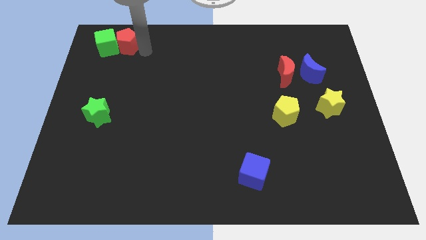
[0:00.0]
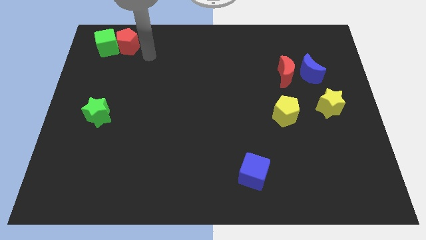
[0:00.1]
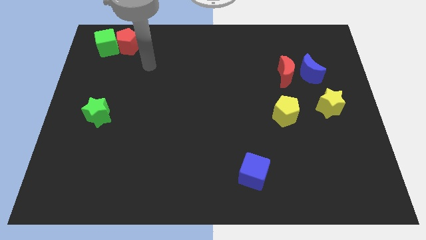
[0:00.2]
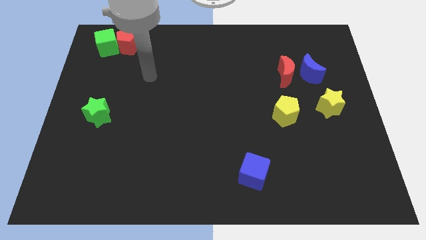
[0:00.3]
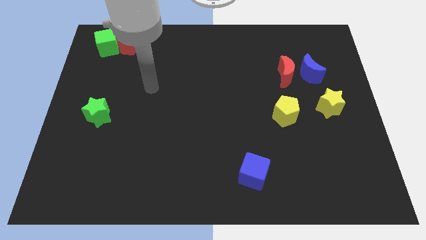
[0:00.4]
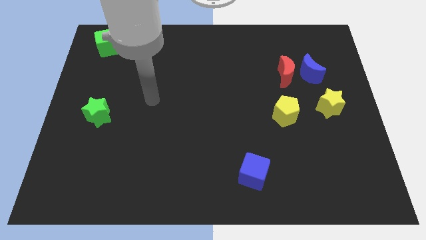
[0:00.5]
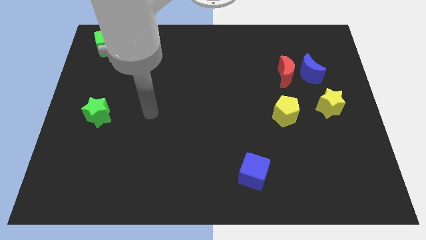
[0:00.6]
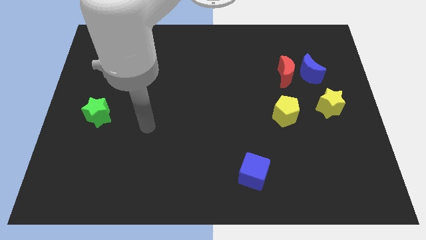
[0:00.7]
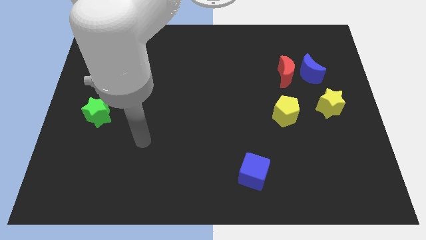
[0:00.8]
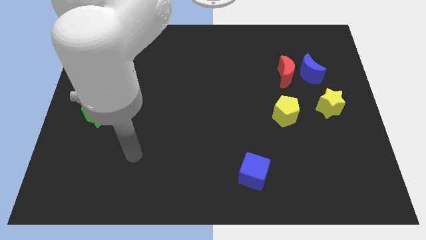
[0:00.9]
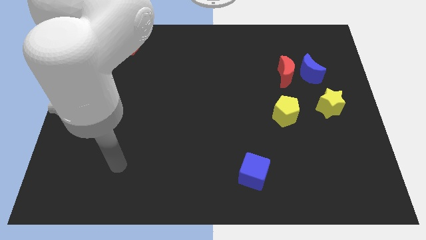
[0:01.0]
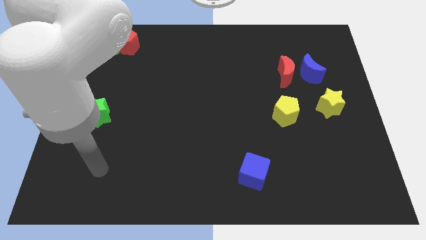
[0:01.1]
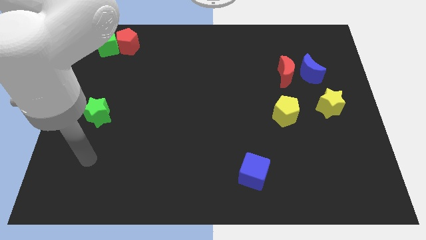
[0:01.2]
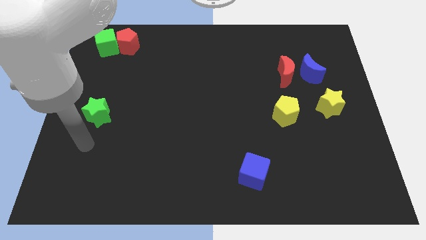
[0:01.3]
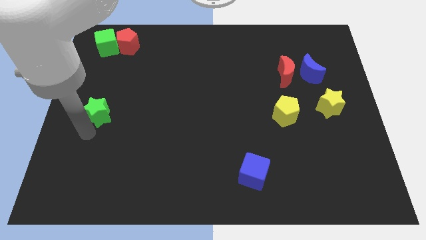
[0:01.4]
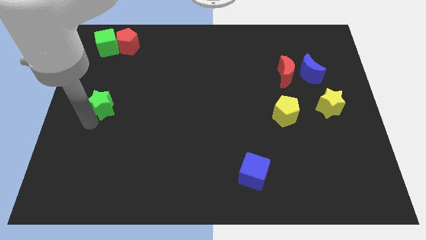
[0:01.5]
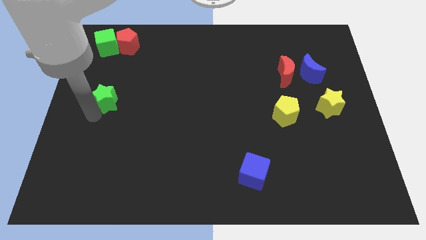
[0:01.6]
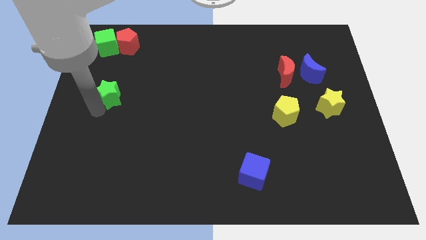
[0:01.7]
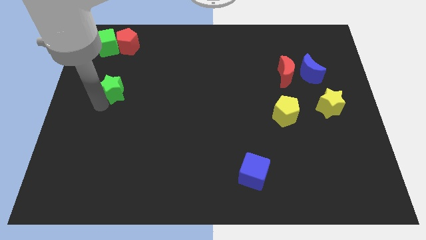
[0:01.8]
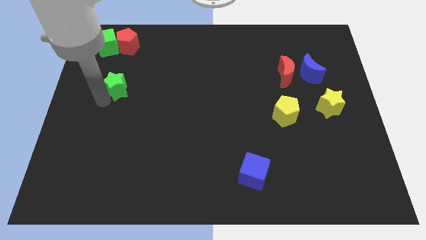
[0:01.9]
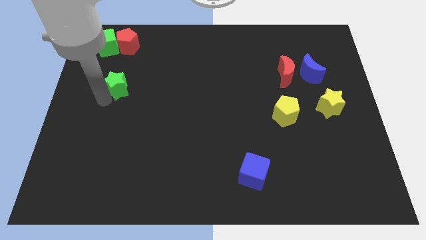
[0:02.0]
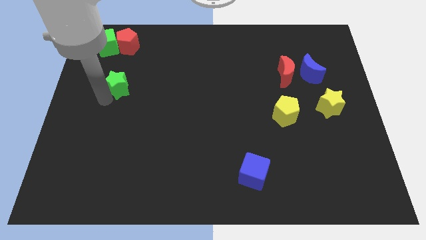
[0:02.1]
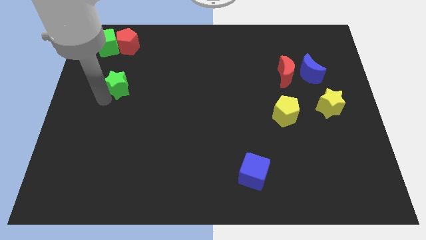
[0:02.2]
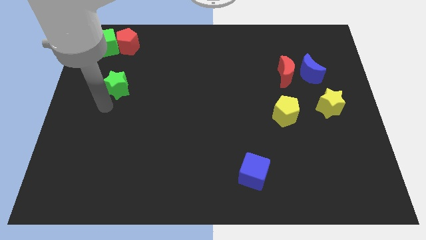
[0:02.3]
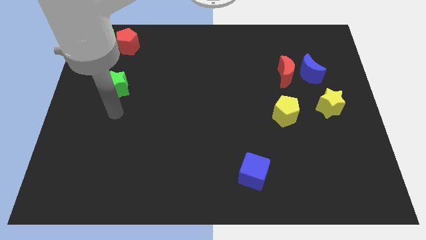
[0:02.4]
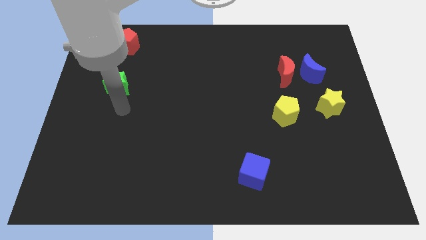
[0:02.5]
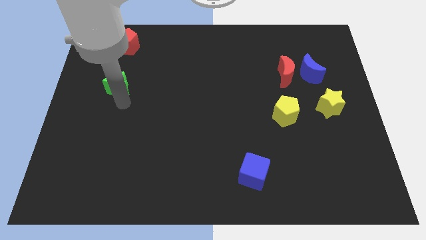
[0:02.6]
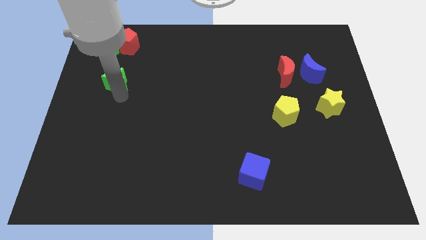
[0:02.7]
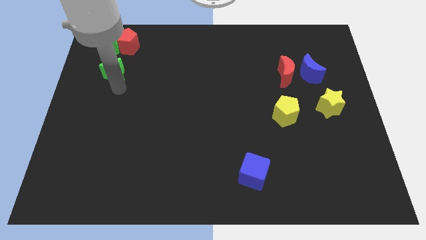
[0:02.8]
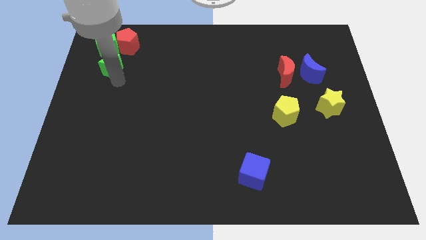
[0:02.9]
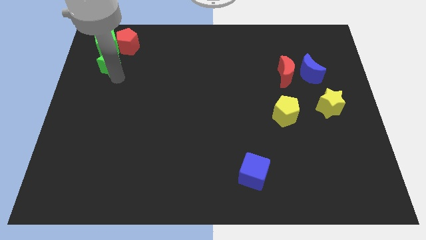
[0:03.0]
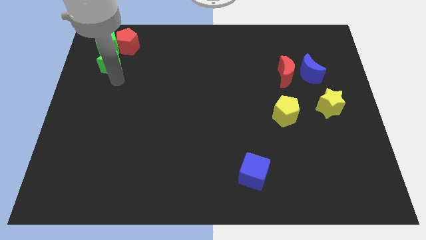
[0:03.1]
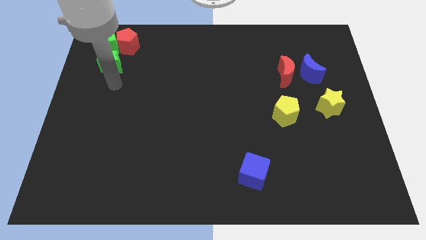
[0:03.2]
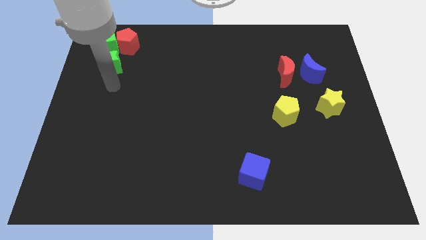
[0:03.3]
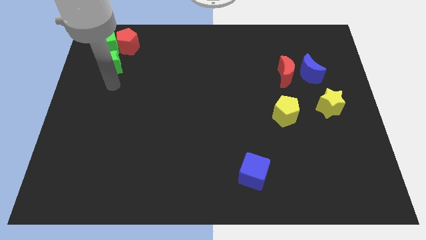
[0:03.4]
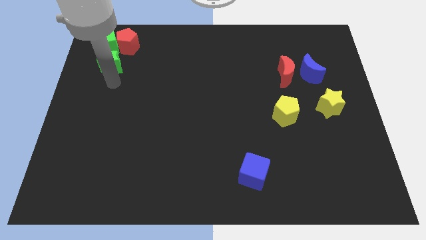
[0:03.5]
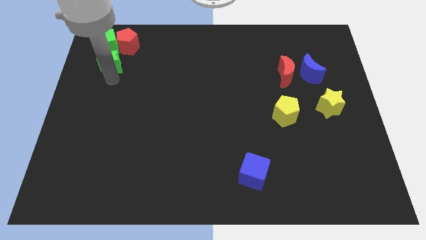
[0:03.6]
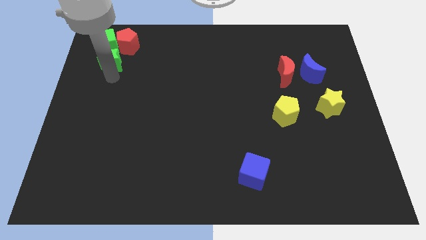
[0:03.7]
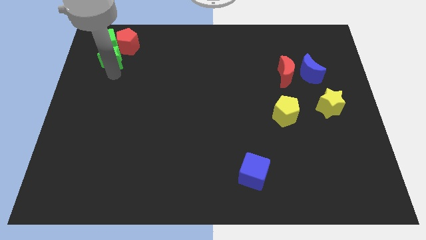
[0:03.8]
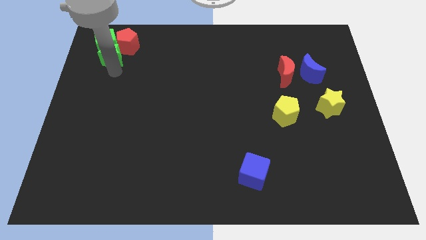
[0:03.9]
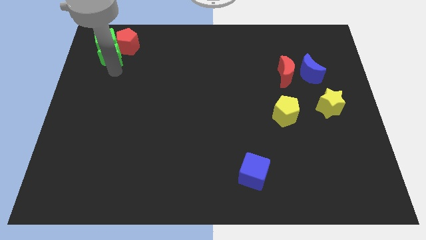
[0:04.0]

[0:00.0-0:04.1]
slide the green star into the green cube and red pentagon

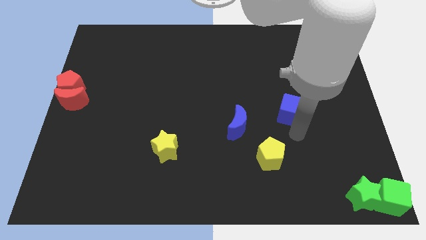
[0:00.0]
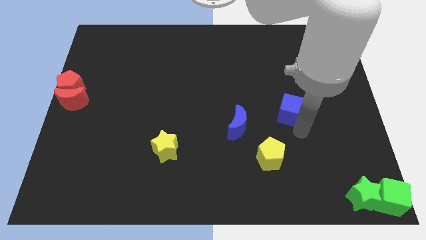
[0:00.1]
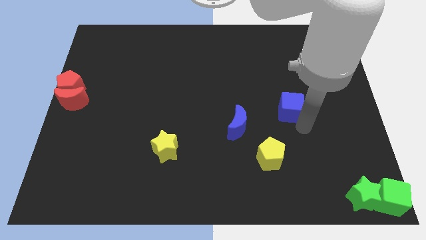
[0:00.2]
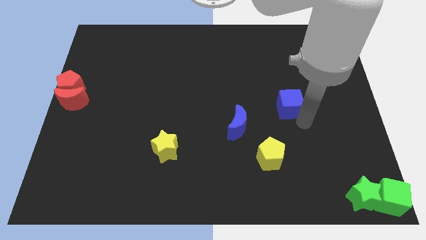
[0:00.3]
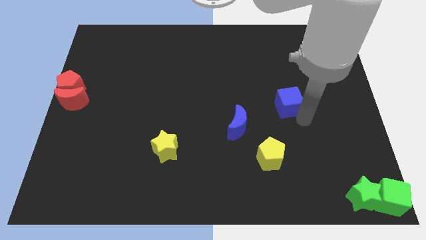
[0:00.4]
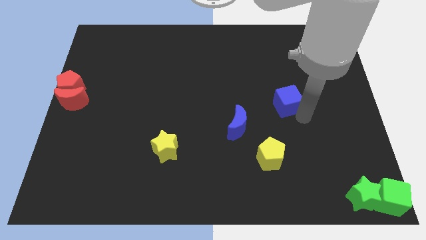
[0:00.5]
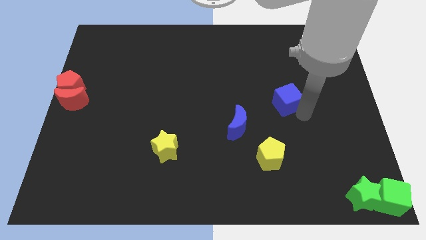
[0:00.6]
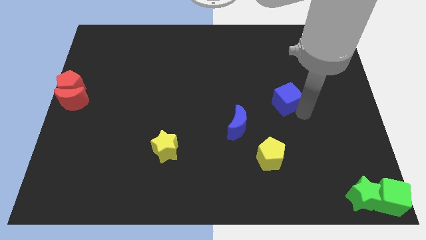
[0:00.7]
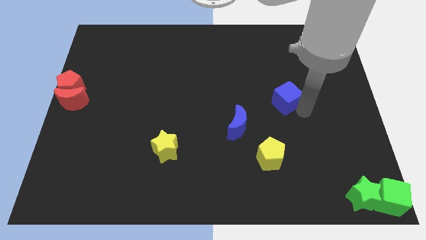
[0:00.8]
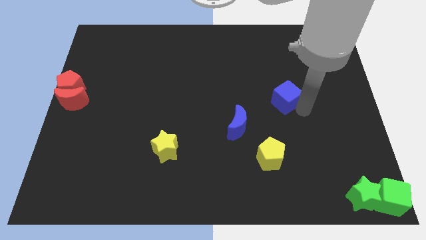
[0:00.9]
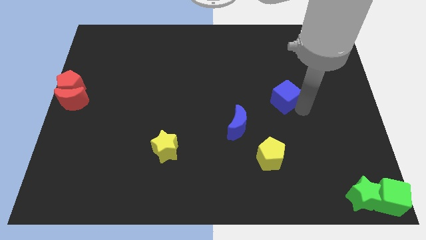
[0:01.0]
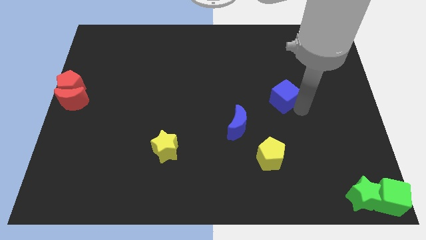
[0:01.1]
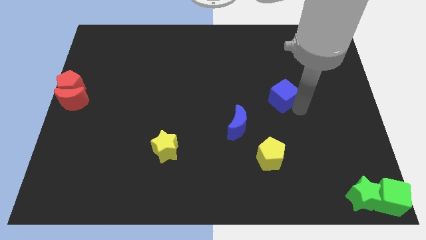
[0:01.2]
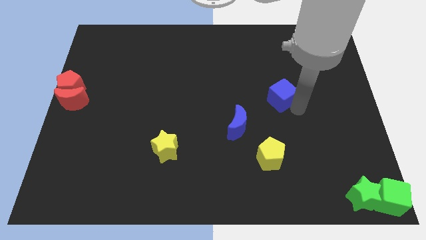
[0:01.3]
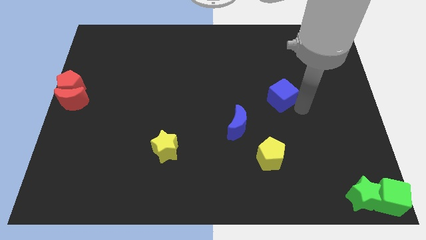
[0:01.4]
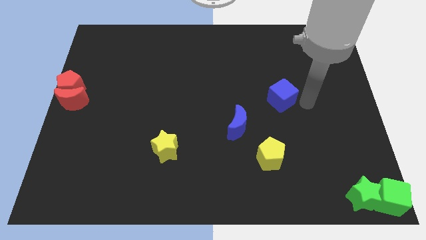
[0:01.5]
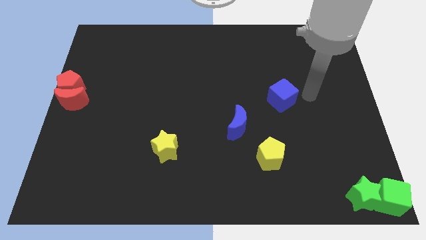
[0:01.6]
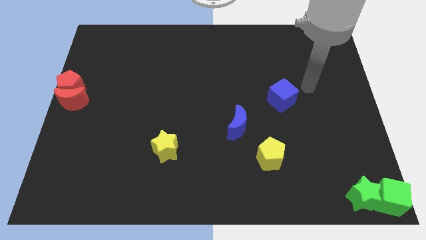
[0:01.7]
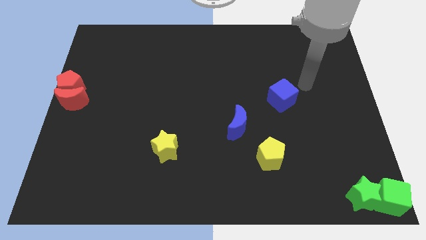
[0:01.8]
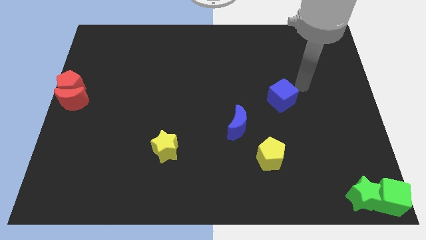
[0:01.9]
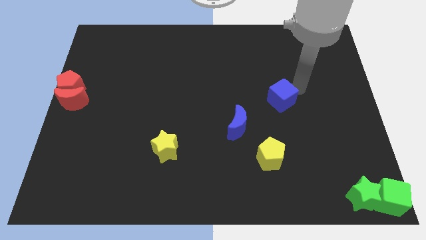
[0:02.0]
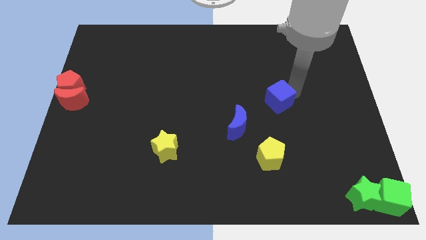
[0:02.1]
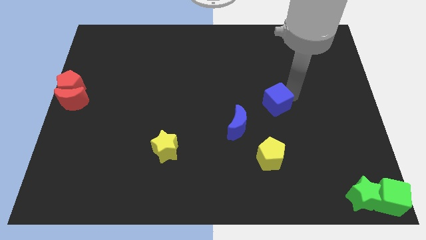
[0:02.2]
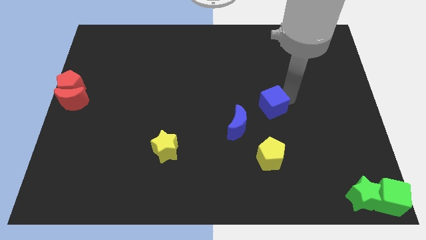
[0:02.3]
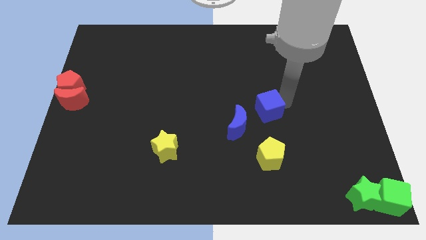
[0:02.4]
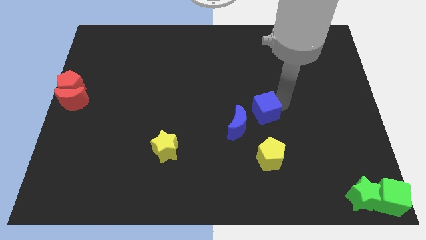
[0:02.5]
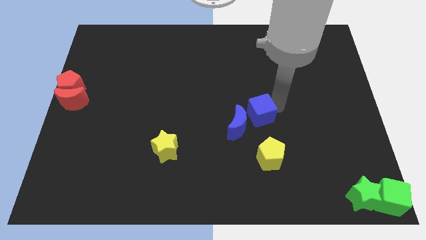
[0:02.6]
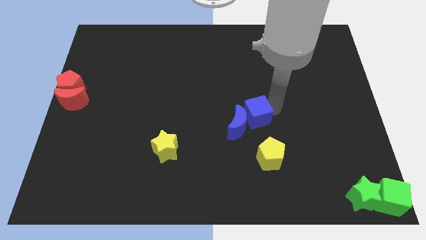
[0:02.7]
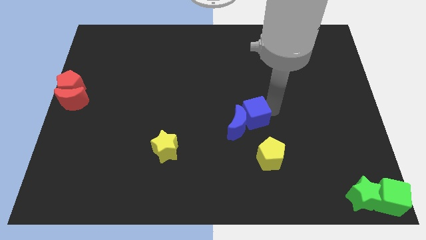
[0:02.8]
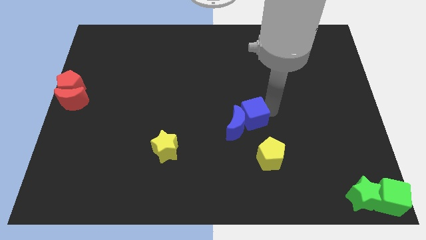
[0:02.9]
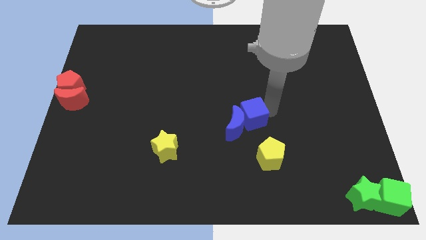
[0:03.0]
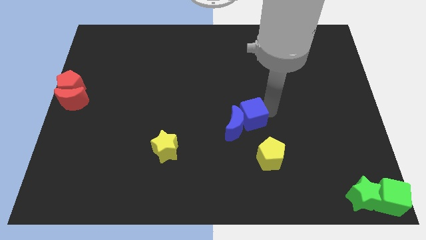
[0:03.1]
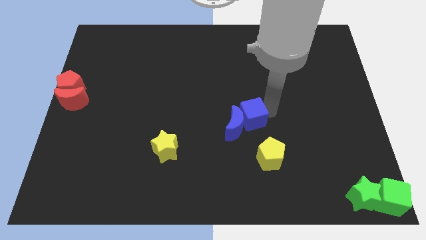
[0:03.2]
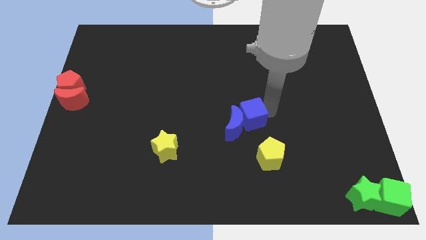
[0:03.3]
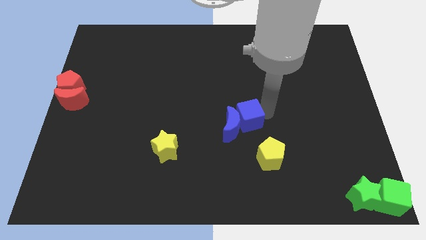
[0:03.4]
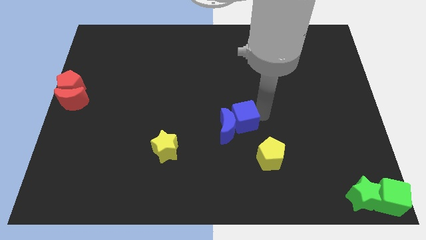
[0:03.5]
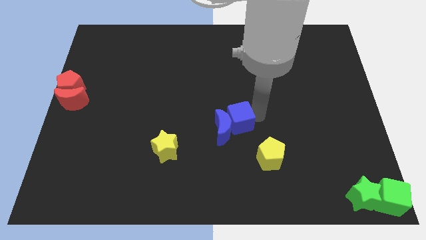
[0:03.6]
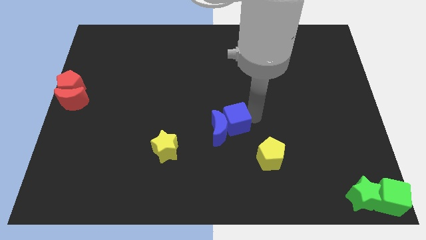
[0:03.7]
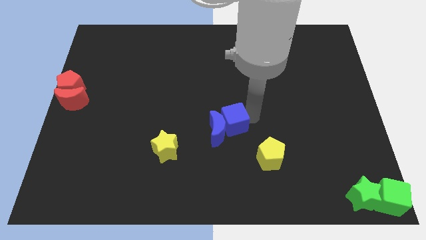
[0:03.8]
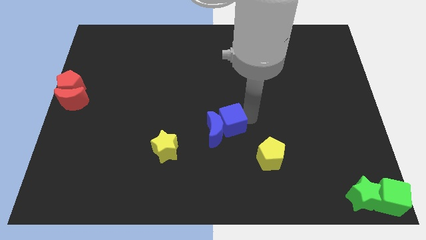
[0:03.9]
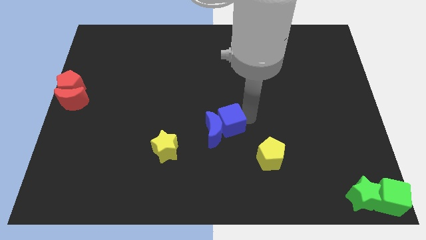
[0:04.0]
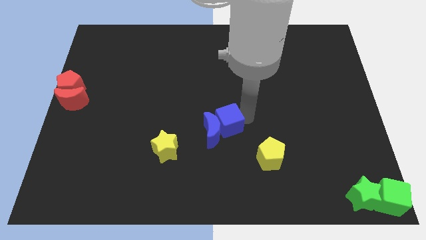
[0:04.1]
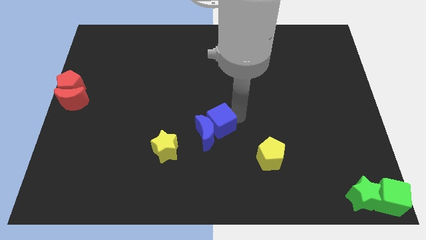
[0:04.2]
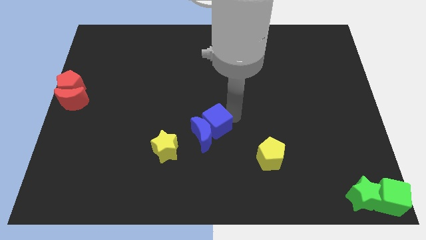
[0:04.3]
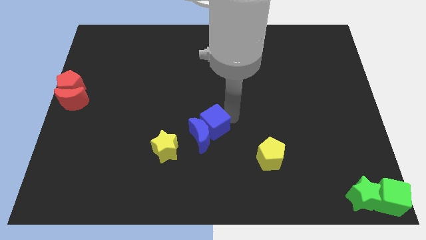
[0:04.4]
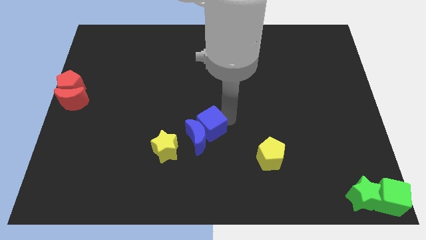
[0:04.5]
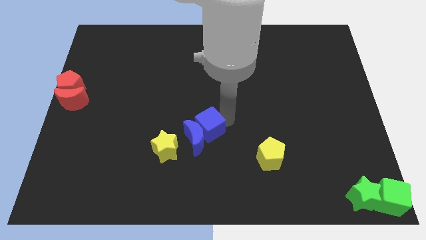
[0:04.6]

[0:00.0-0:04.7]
push the blue moon with a blue cube towards the right of the yellow star

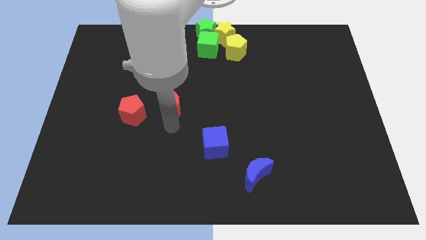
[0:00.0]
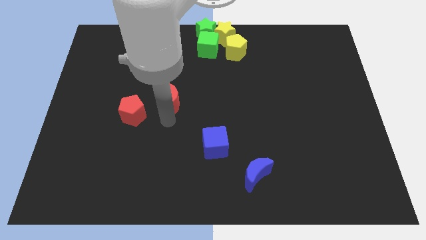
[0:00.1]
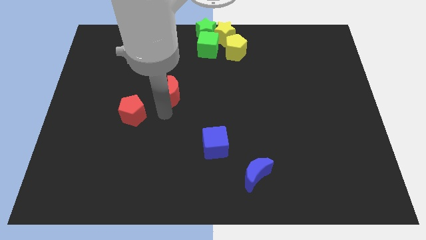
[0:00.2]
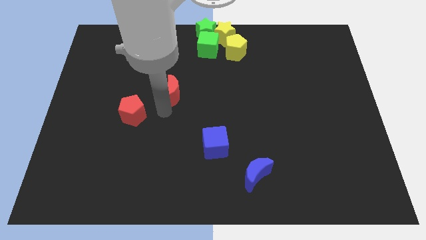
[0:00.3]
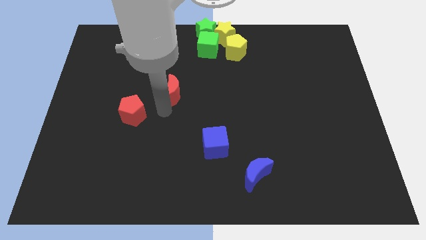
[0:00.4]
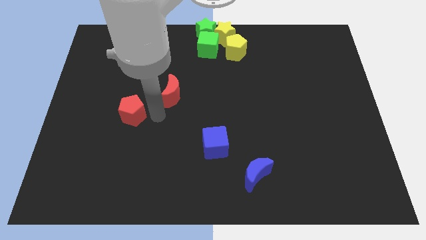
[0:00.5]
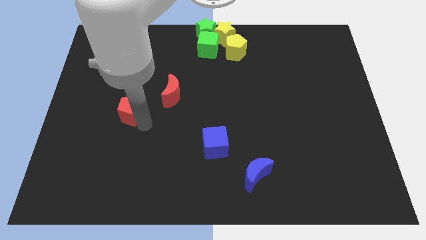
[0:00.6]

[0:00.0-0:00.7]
push the red moon slightly up
